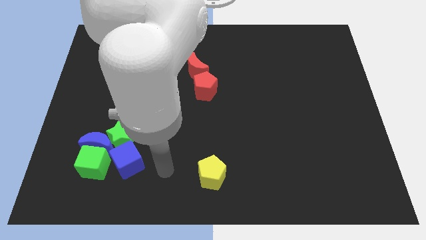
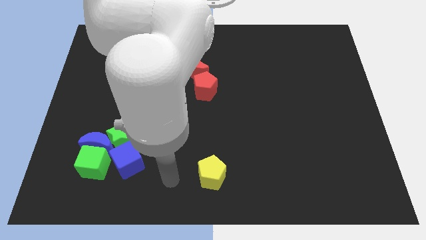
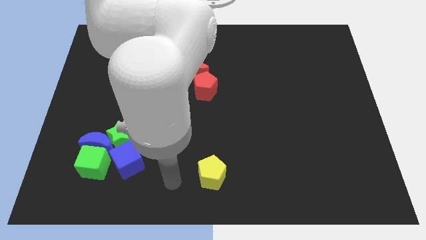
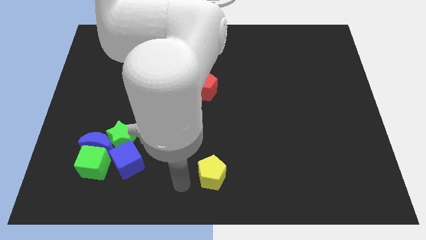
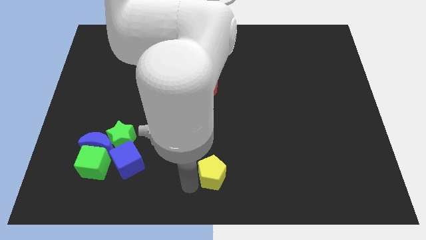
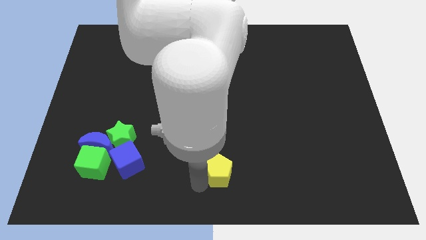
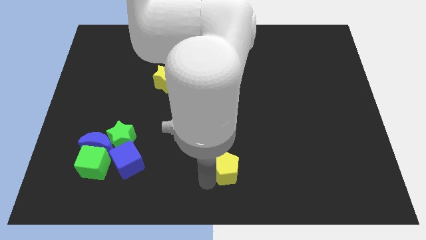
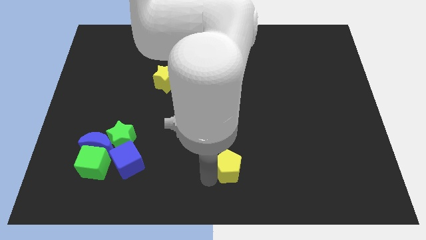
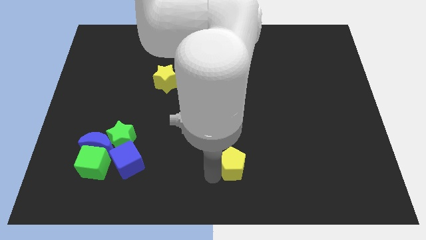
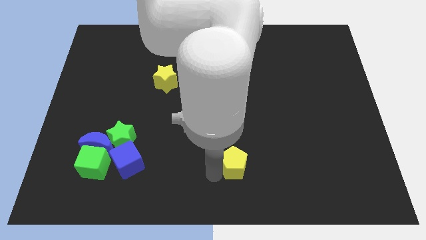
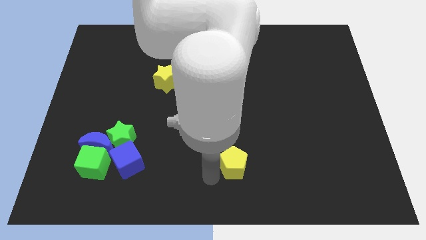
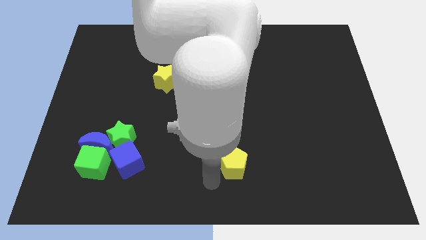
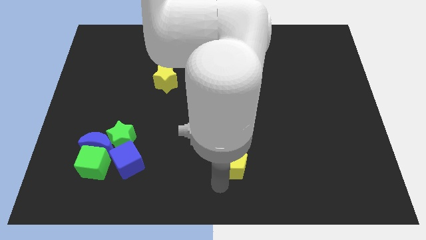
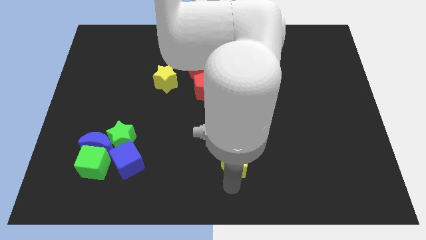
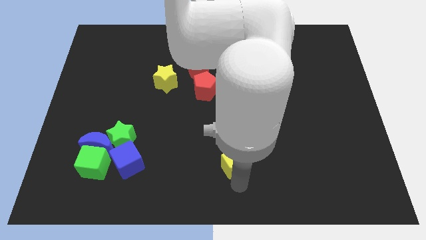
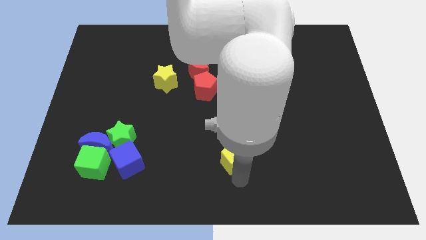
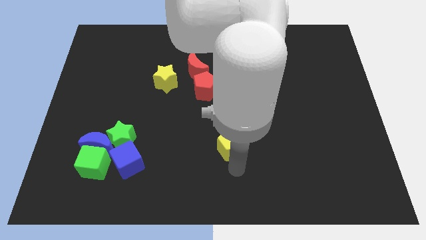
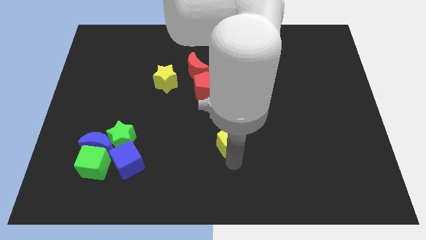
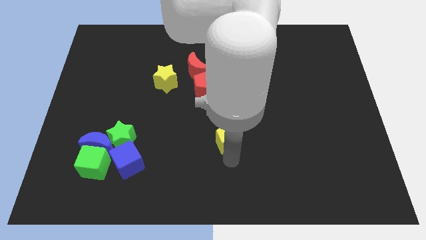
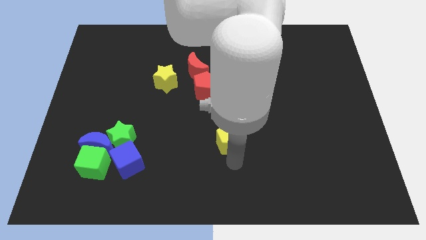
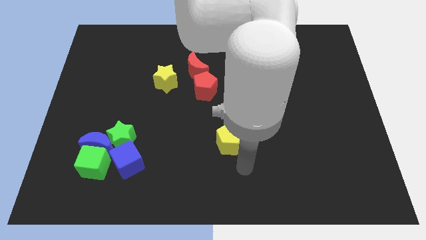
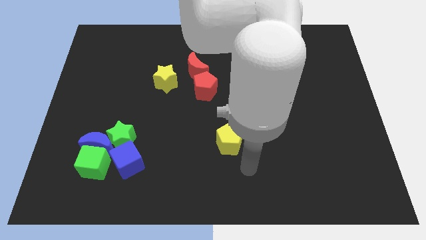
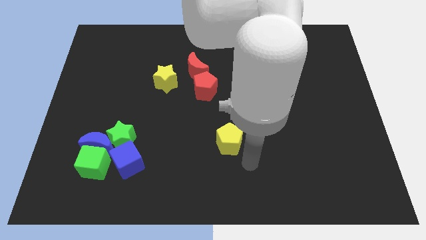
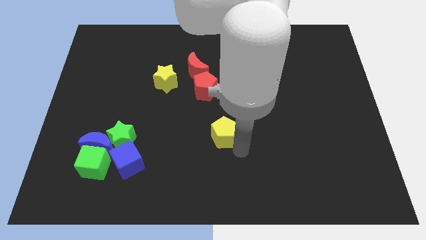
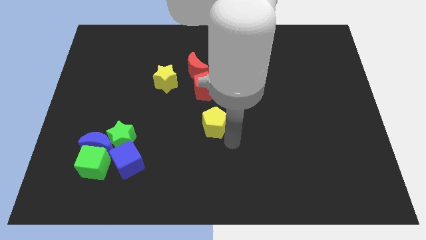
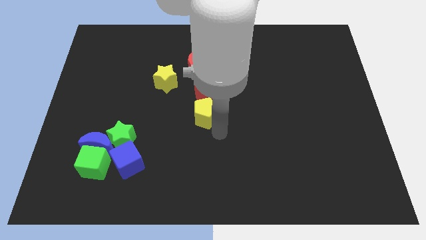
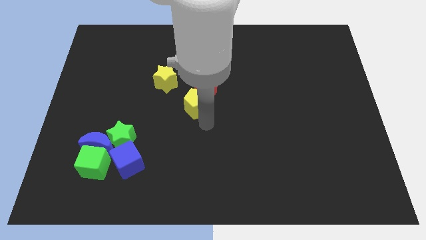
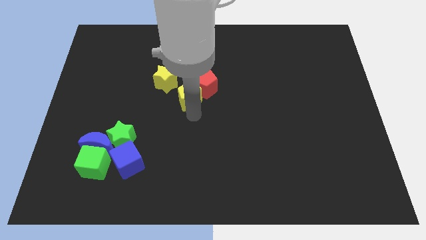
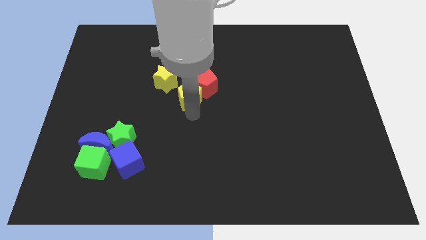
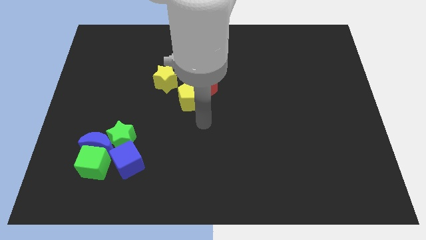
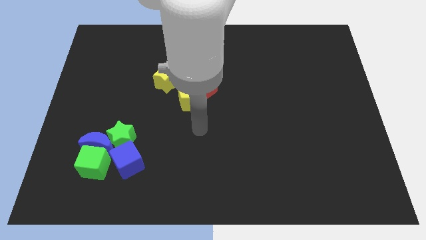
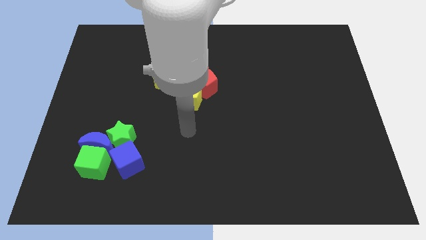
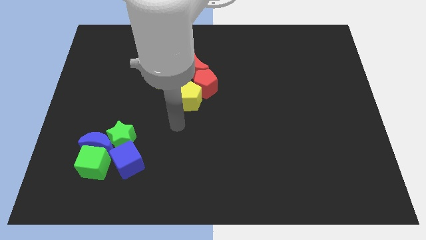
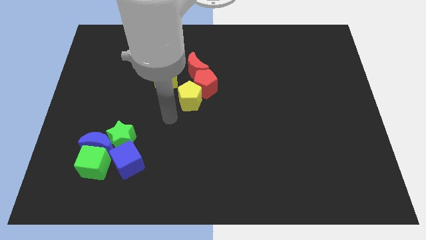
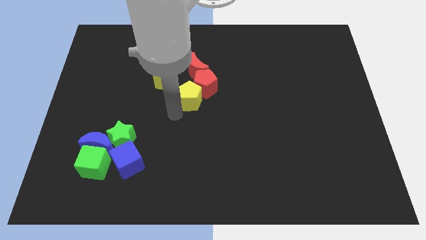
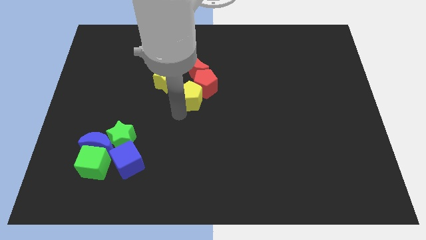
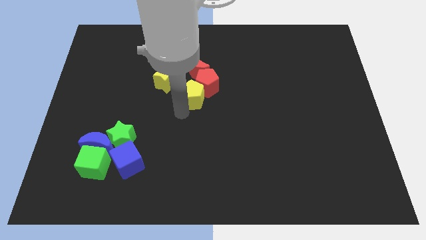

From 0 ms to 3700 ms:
push the yellow pentagon into the red pentagon

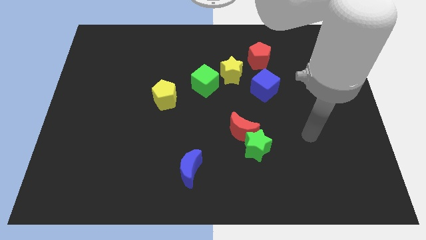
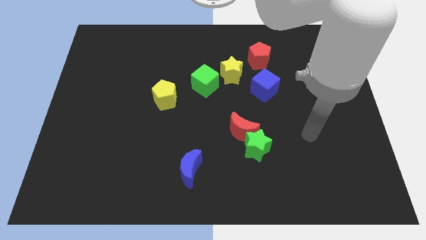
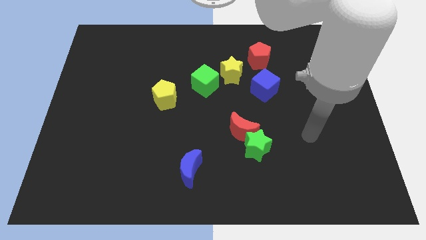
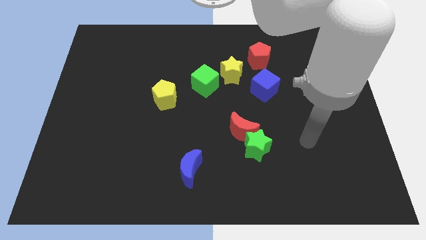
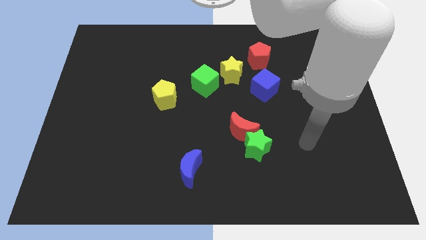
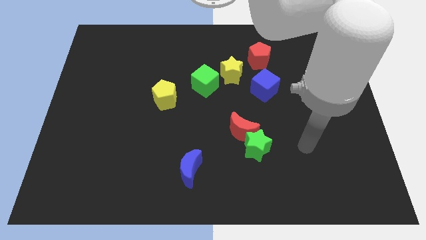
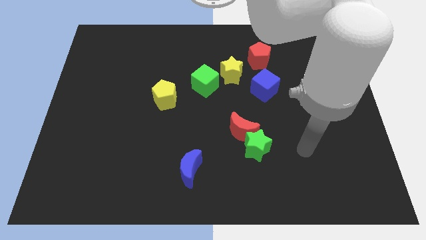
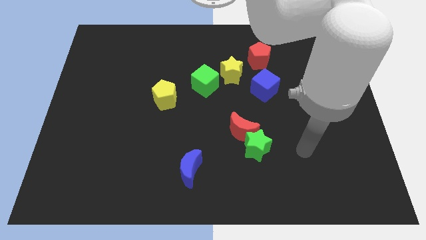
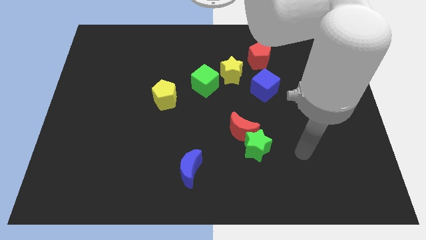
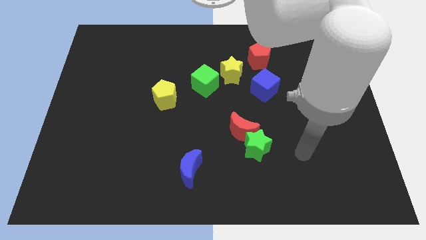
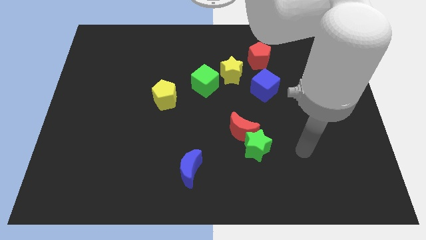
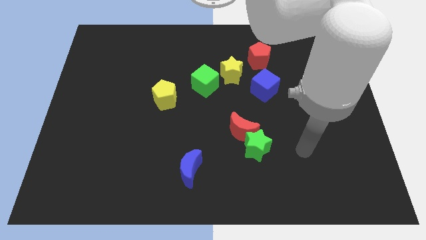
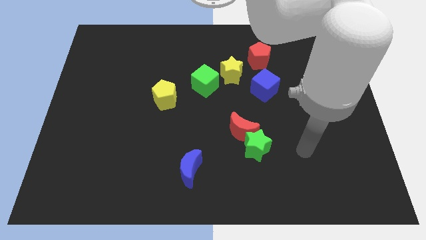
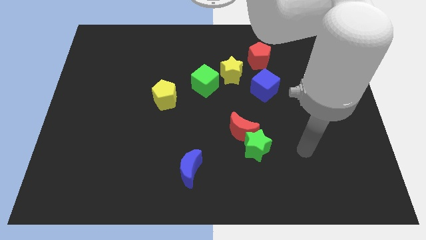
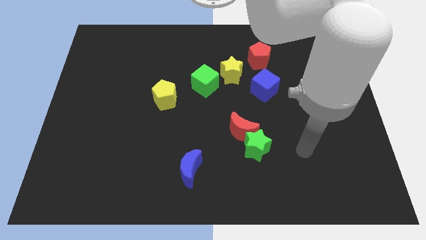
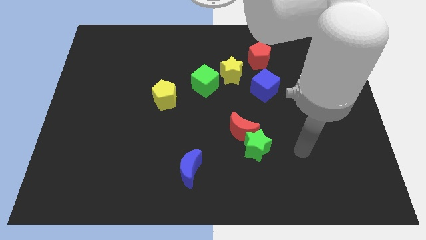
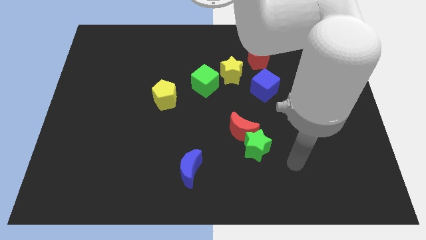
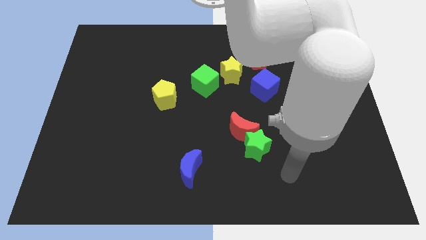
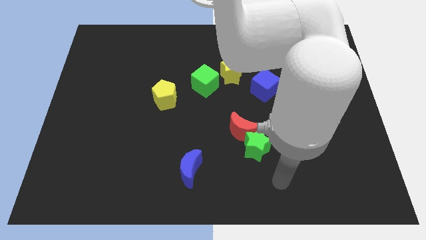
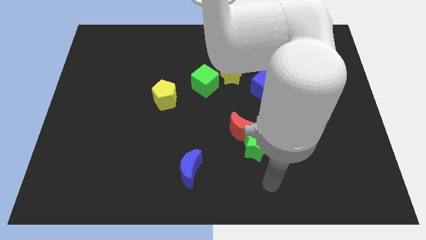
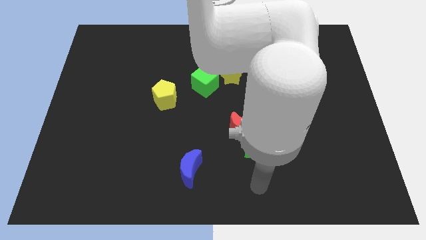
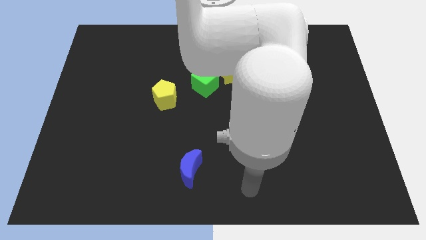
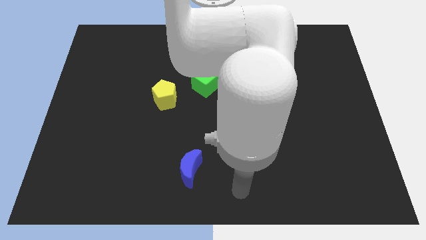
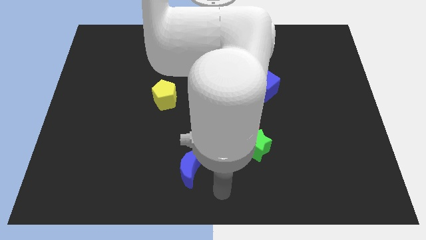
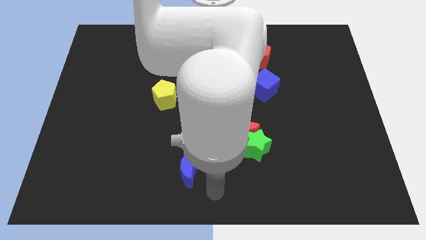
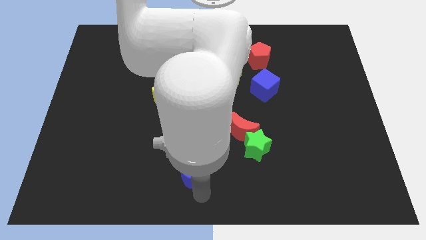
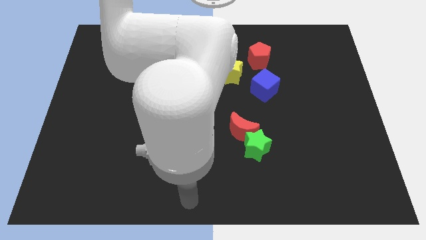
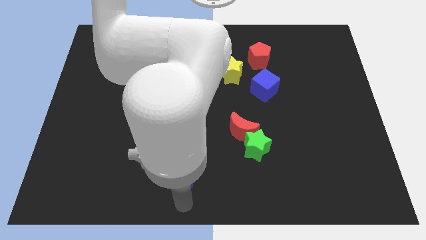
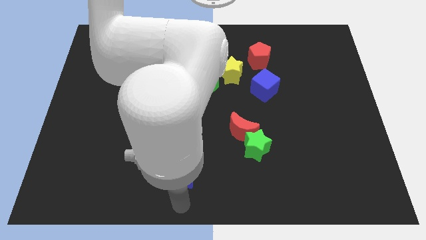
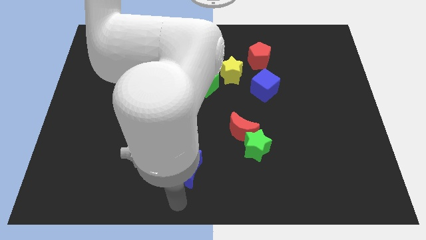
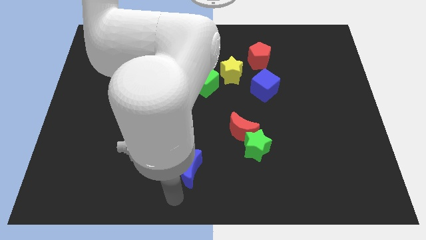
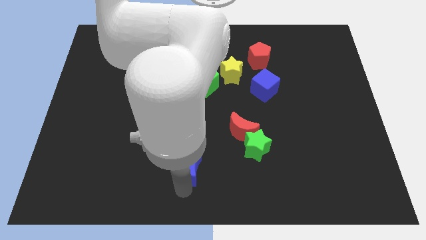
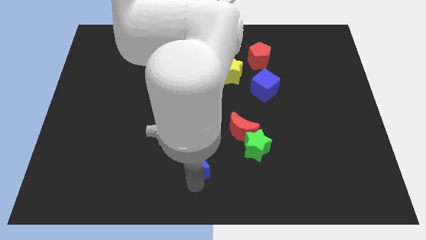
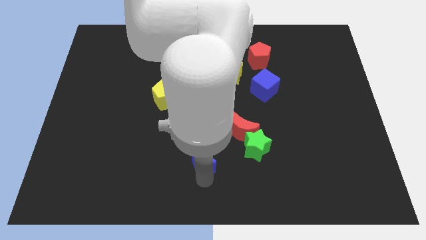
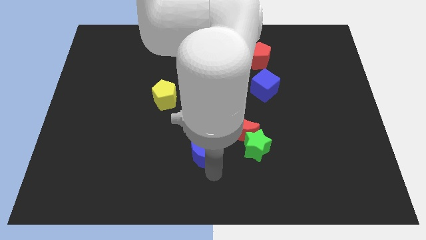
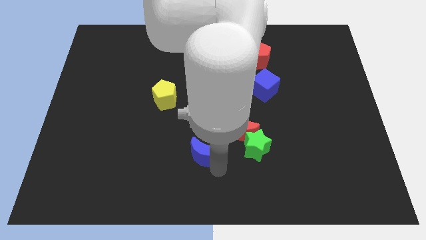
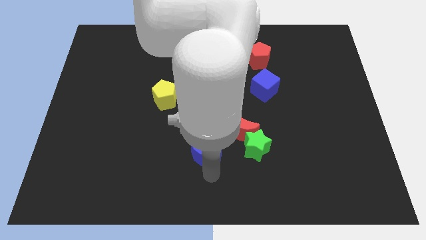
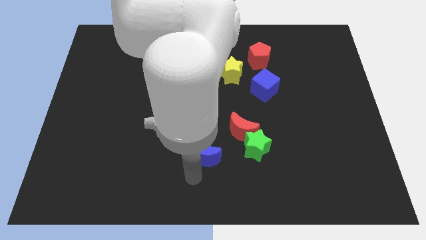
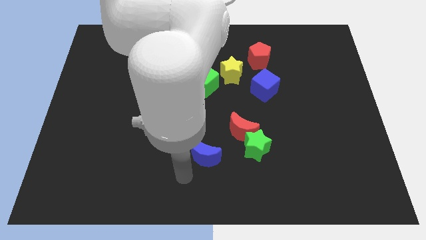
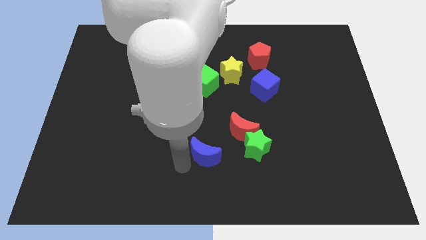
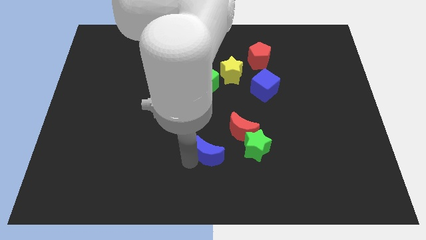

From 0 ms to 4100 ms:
move the blue crescent to the left of the red crescent

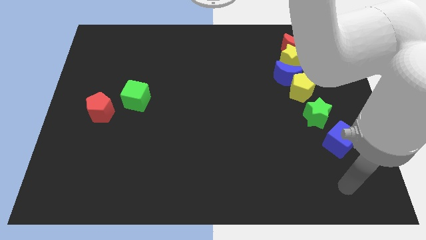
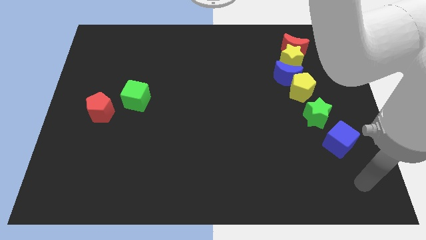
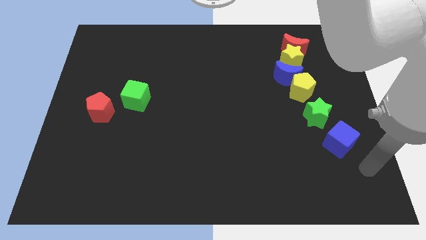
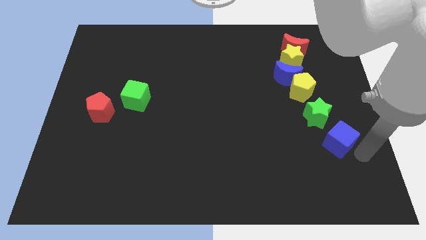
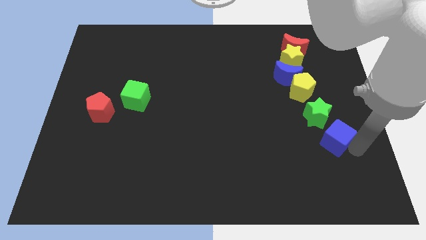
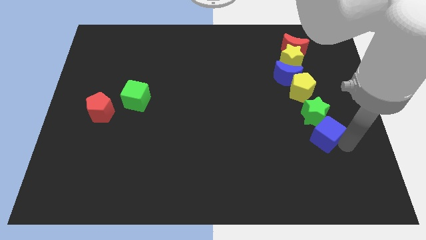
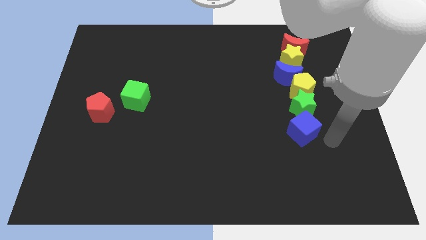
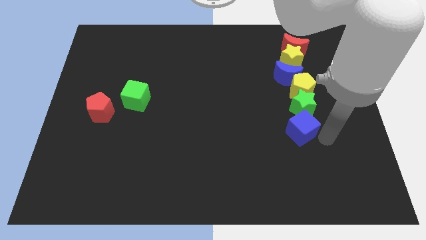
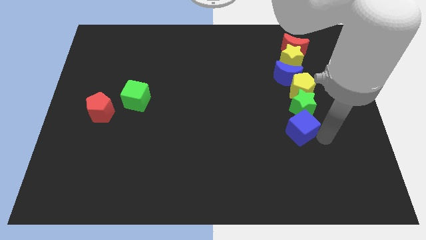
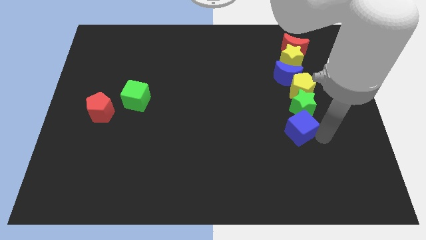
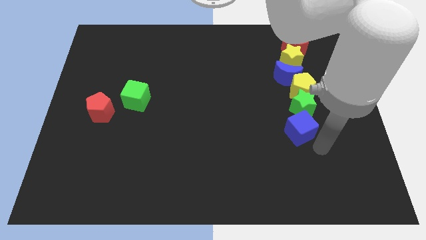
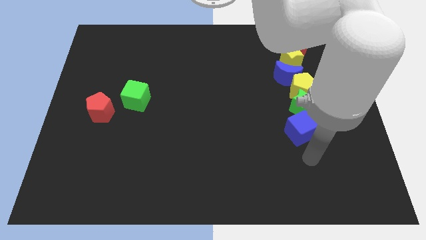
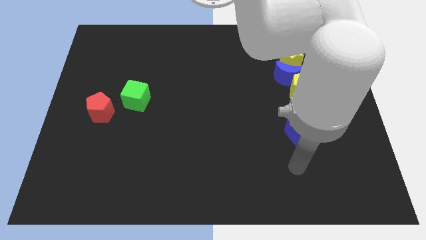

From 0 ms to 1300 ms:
push the blue cube into the green star
